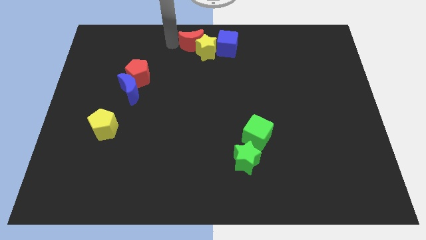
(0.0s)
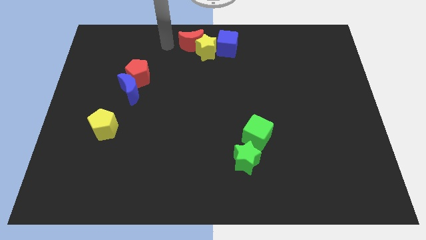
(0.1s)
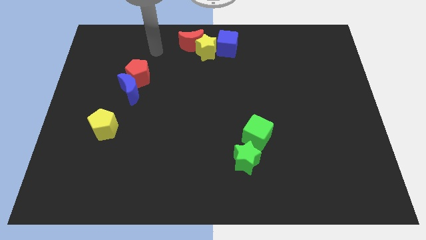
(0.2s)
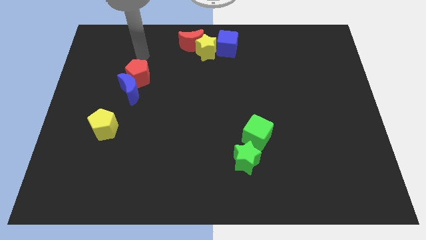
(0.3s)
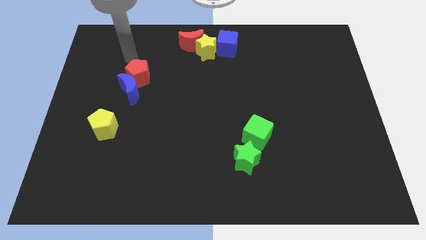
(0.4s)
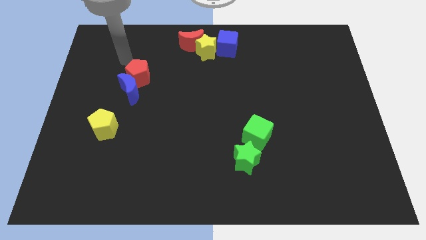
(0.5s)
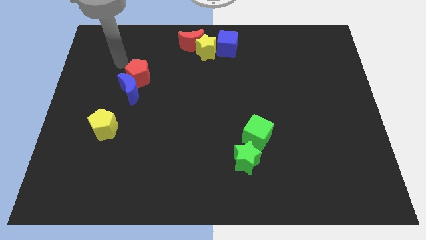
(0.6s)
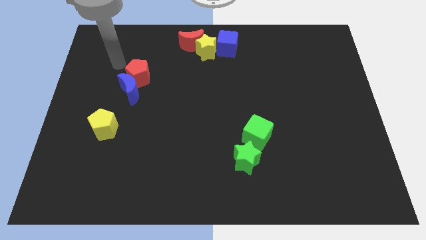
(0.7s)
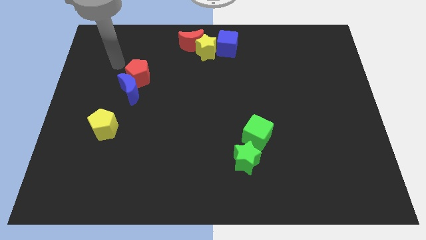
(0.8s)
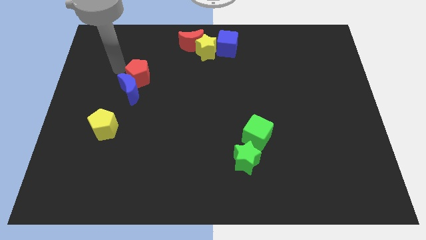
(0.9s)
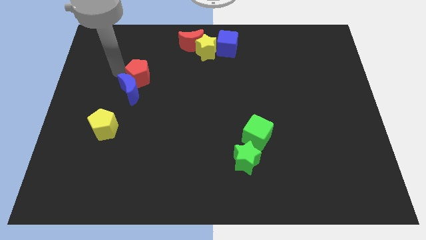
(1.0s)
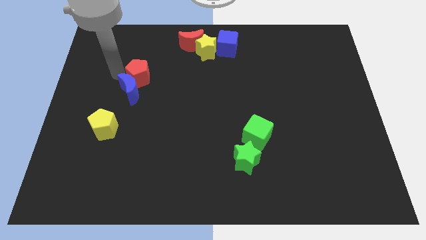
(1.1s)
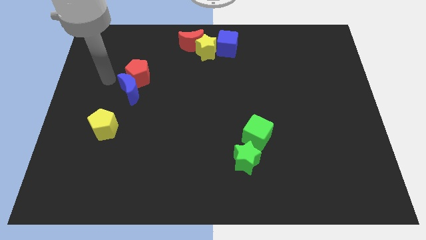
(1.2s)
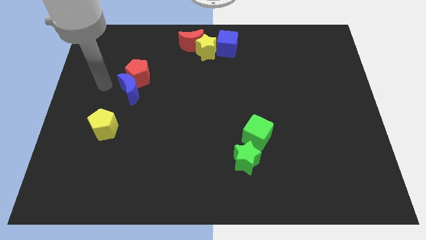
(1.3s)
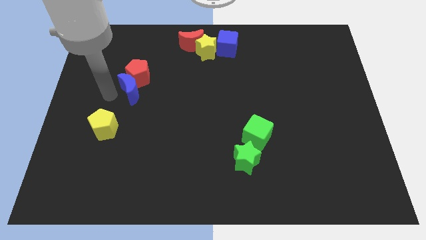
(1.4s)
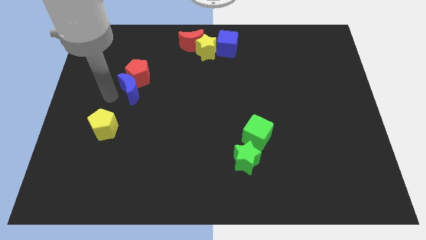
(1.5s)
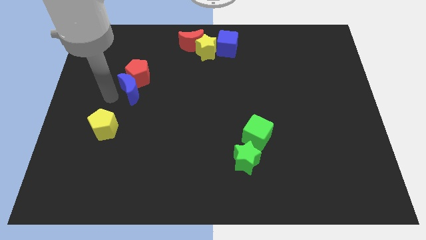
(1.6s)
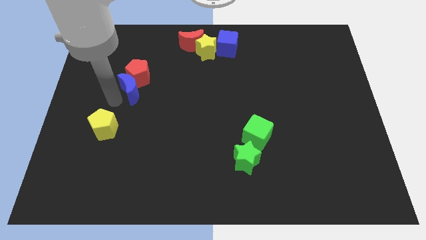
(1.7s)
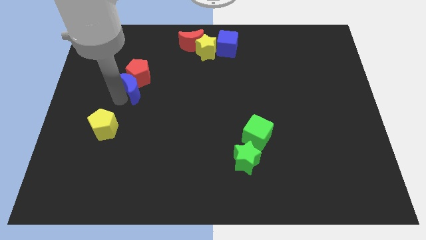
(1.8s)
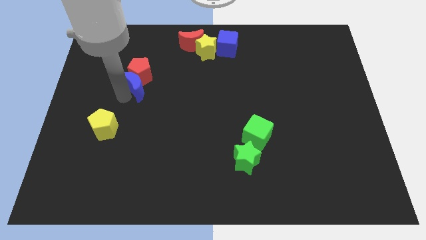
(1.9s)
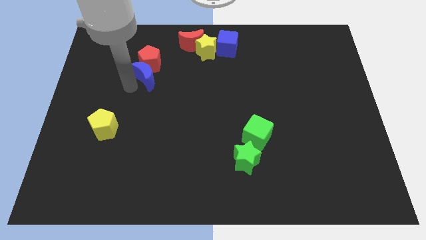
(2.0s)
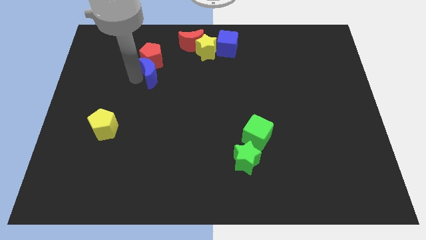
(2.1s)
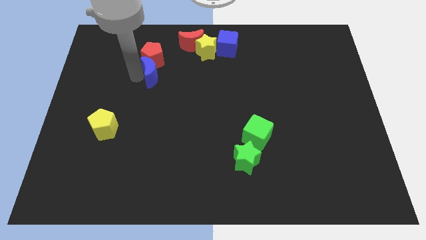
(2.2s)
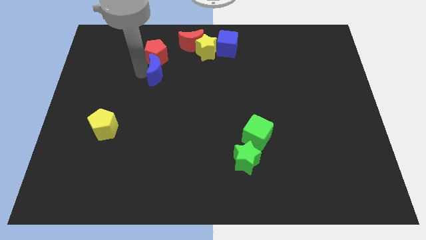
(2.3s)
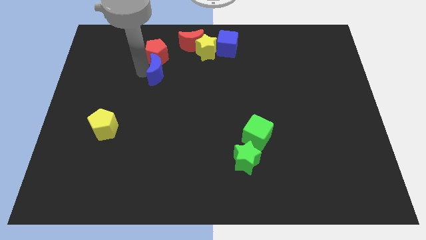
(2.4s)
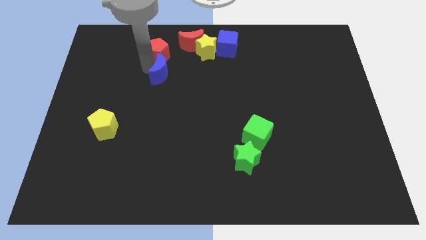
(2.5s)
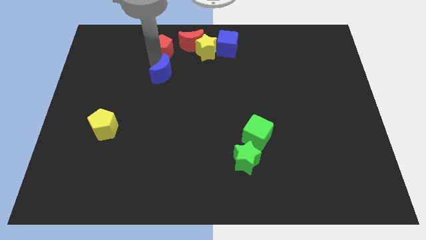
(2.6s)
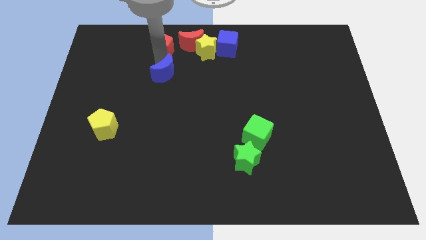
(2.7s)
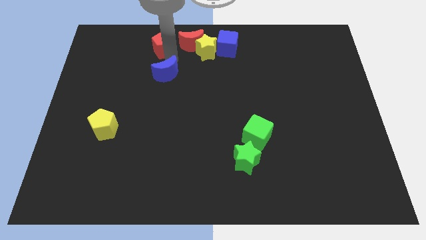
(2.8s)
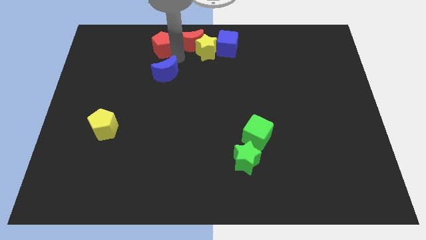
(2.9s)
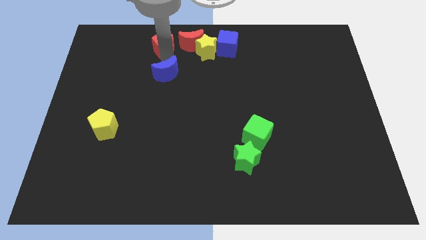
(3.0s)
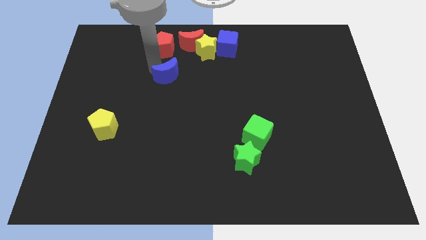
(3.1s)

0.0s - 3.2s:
place the red pentagon and blue moon vertical to each other

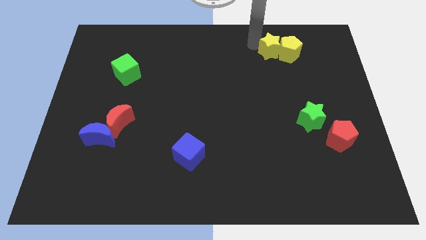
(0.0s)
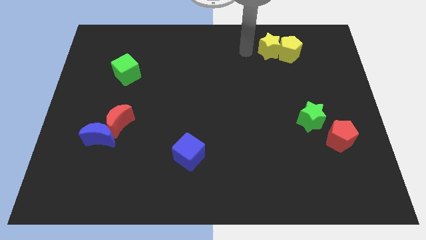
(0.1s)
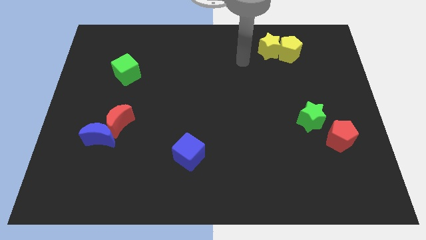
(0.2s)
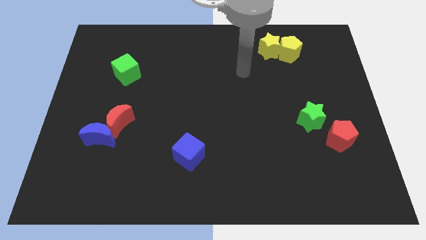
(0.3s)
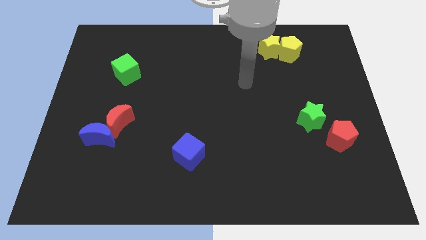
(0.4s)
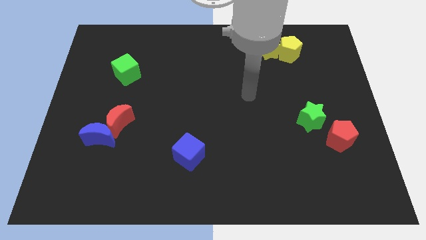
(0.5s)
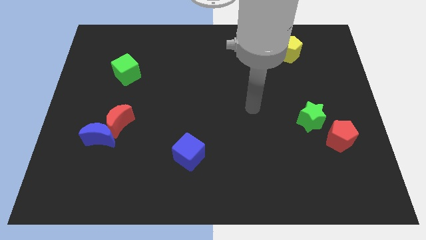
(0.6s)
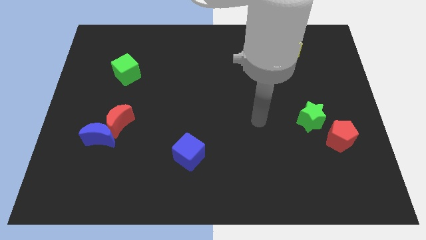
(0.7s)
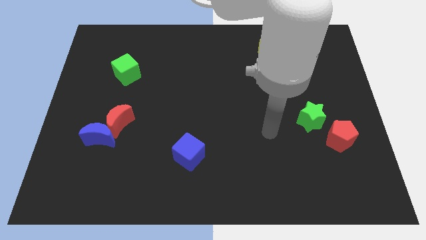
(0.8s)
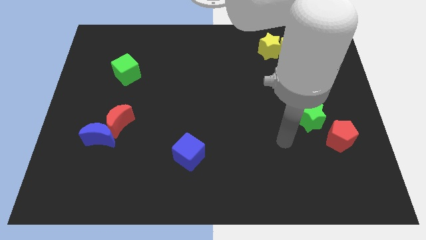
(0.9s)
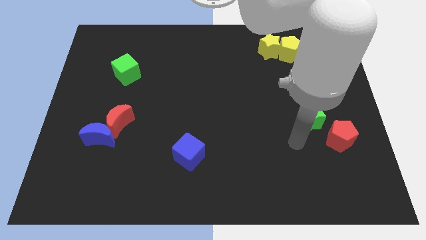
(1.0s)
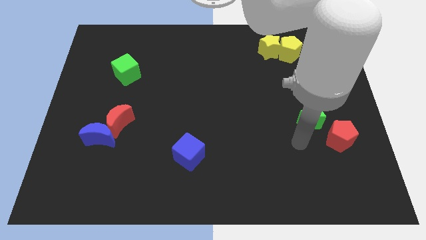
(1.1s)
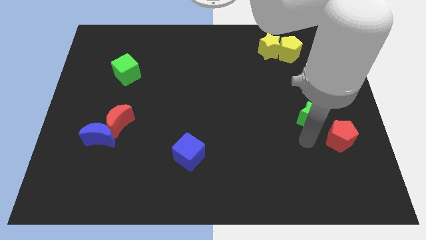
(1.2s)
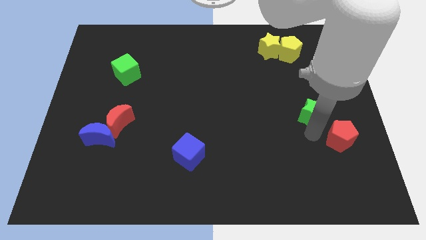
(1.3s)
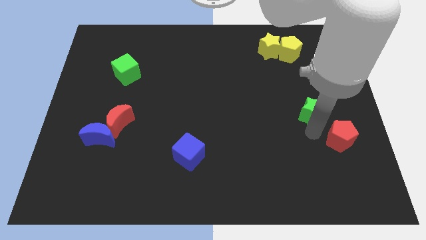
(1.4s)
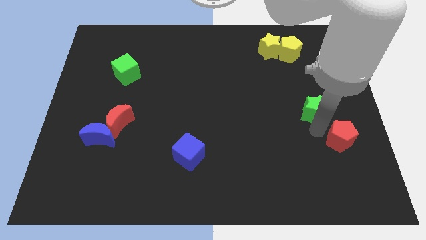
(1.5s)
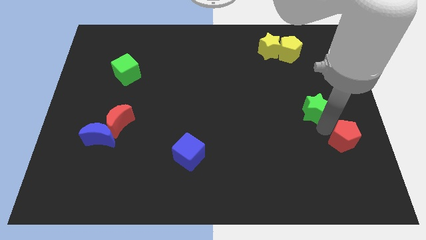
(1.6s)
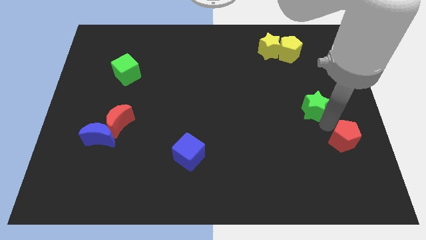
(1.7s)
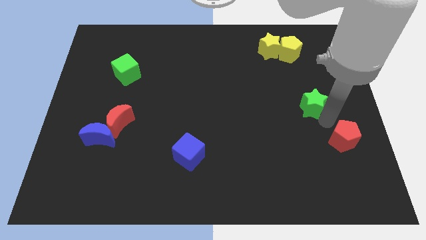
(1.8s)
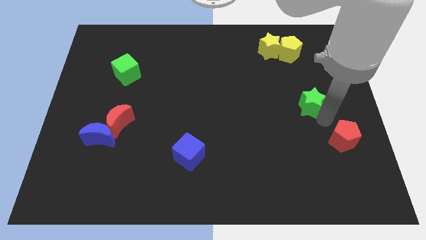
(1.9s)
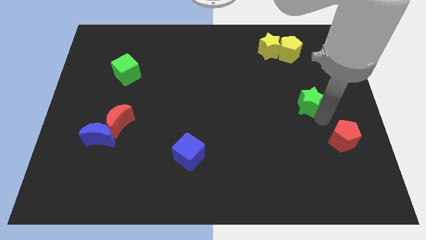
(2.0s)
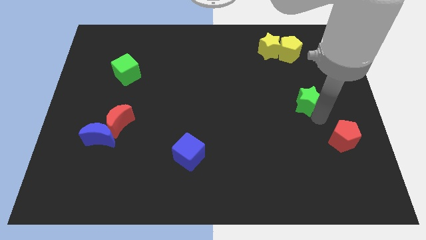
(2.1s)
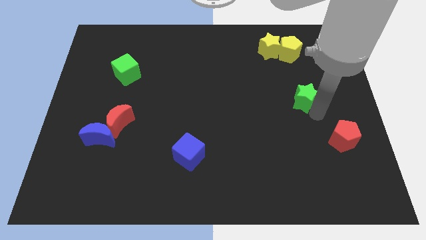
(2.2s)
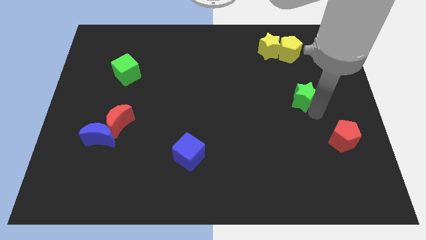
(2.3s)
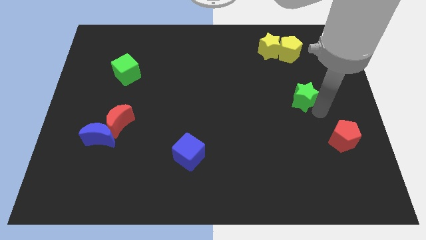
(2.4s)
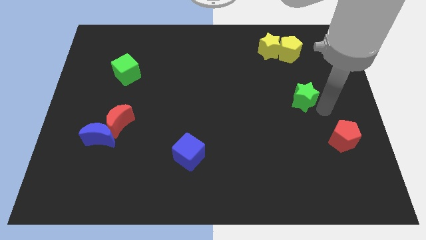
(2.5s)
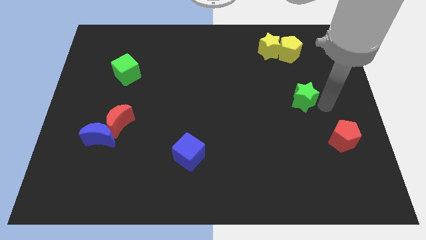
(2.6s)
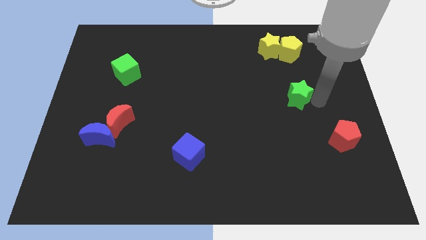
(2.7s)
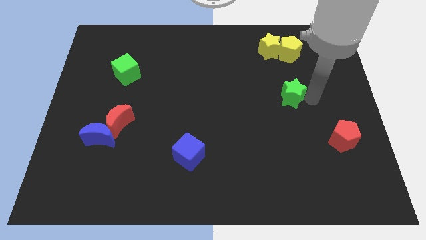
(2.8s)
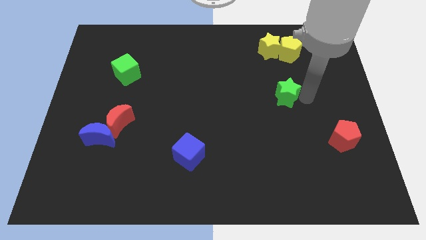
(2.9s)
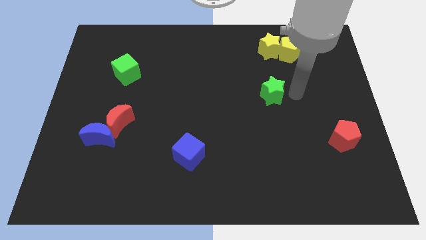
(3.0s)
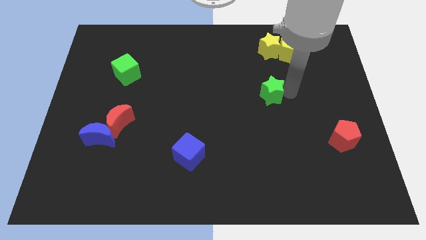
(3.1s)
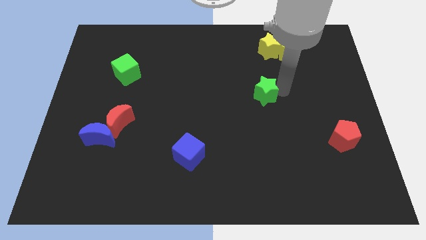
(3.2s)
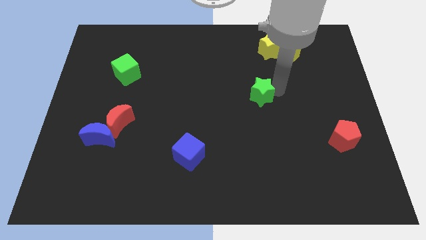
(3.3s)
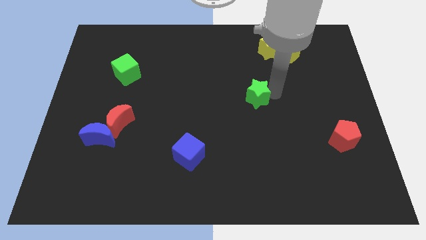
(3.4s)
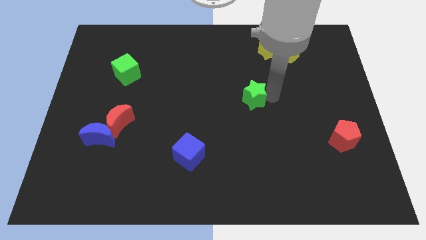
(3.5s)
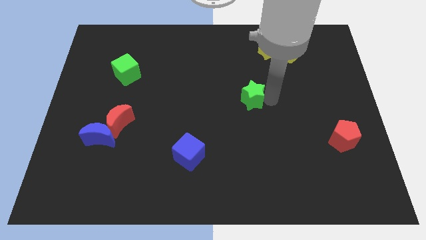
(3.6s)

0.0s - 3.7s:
move the green star away from the red pentagon

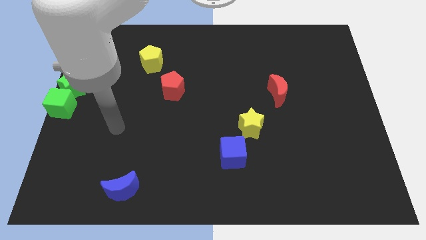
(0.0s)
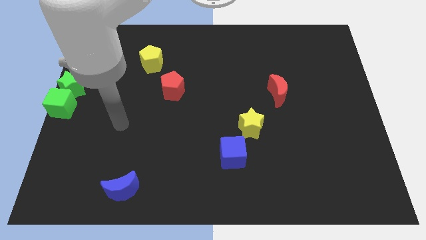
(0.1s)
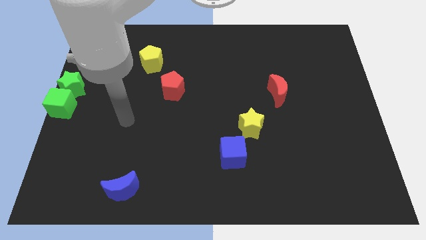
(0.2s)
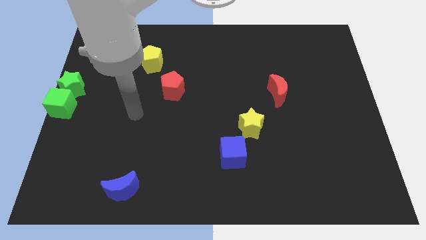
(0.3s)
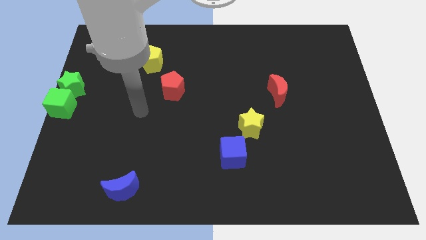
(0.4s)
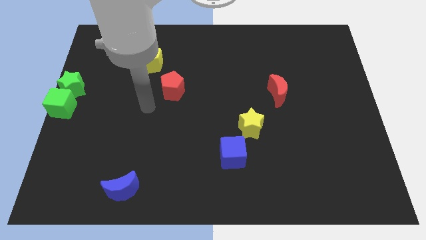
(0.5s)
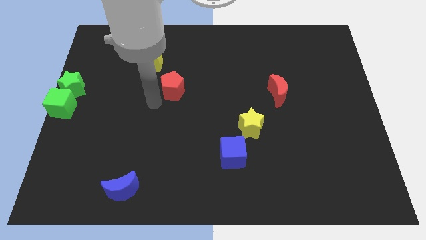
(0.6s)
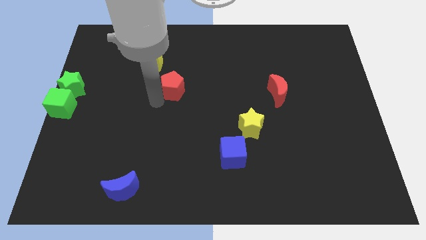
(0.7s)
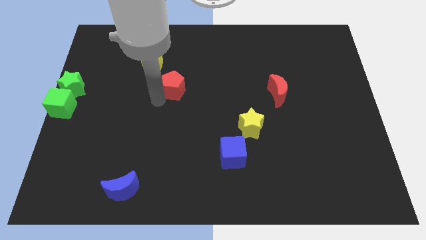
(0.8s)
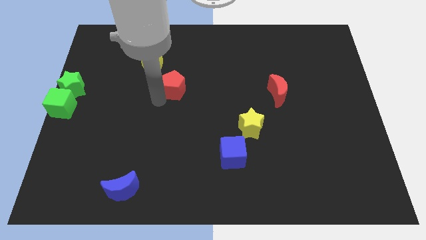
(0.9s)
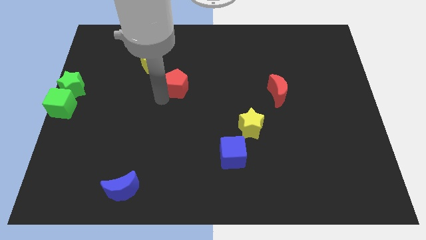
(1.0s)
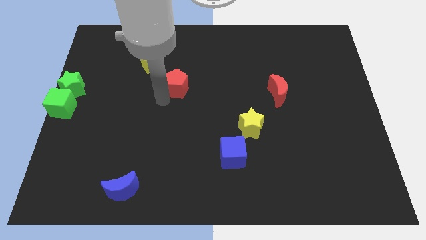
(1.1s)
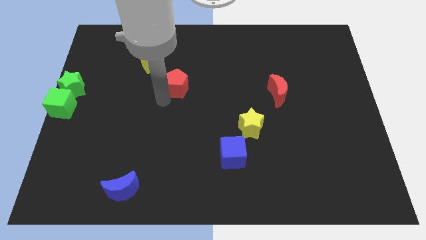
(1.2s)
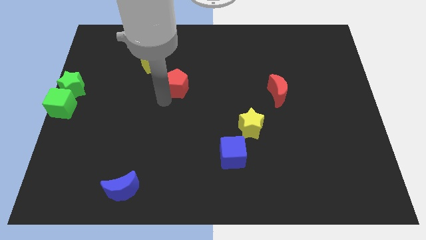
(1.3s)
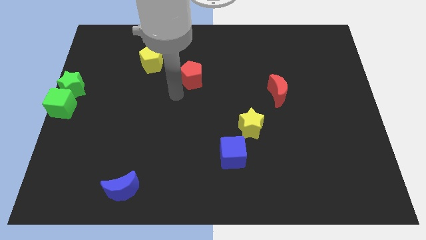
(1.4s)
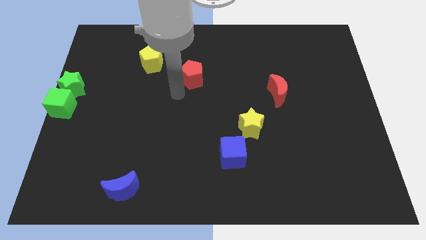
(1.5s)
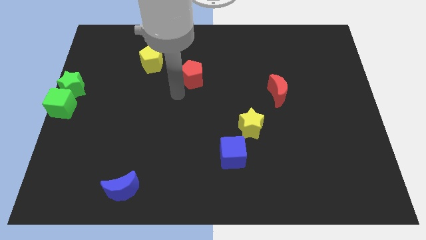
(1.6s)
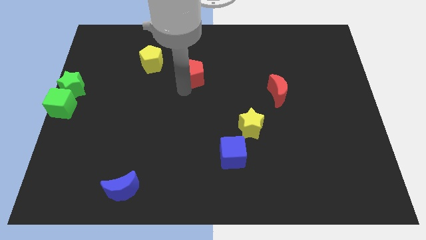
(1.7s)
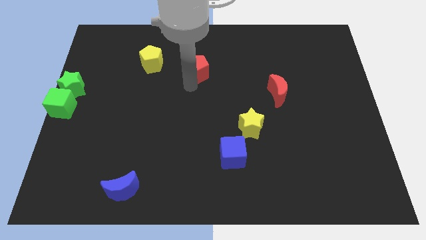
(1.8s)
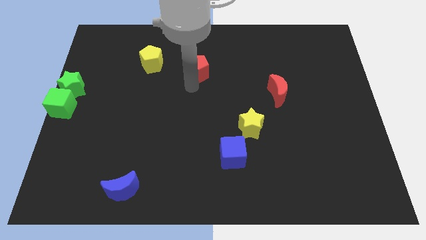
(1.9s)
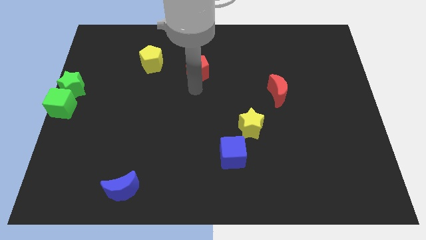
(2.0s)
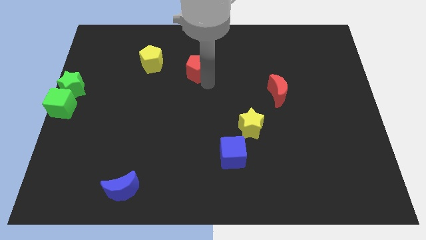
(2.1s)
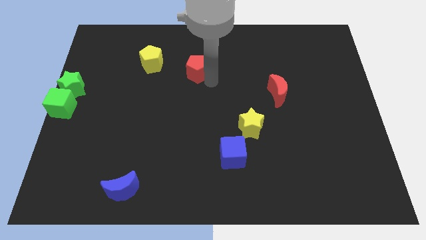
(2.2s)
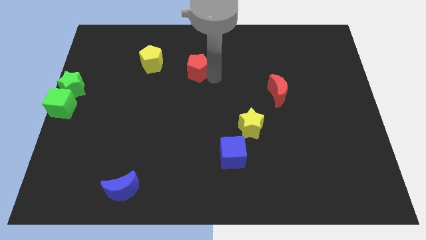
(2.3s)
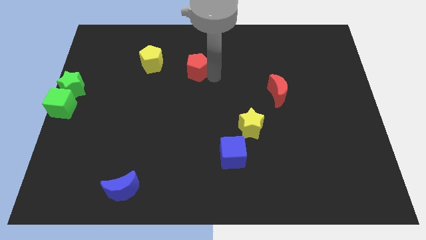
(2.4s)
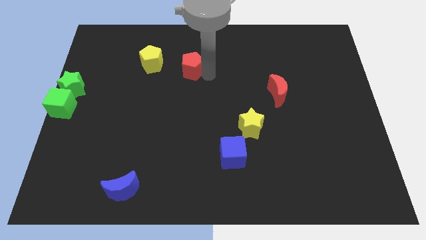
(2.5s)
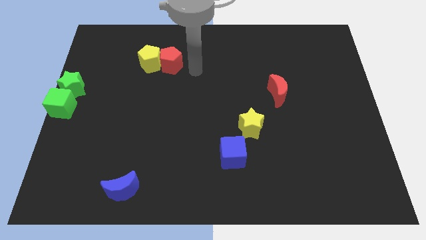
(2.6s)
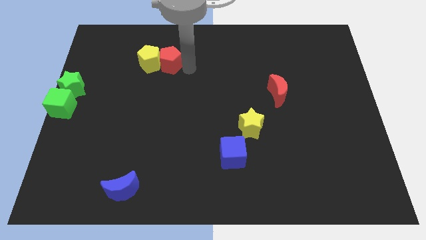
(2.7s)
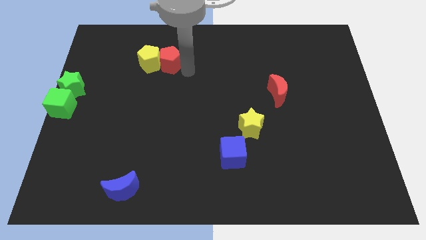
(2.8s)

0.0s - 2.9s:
push the red pentagon into yellow pentagon
